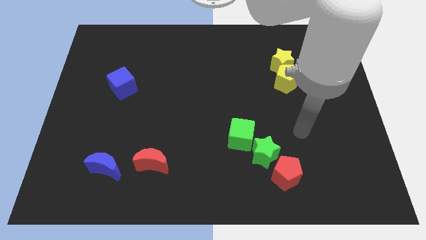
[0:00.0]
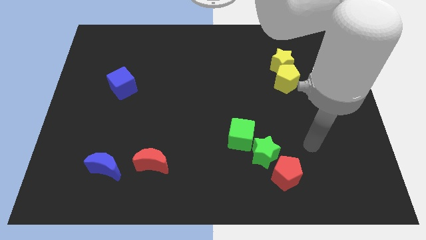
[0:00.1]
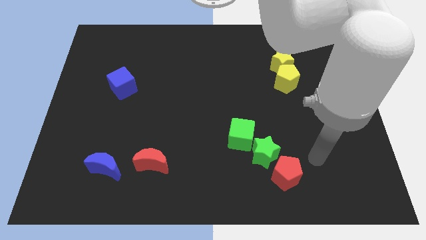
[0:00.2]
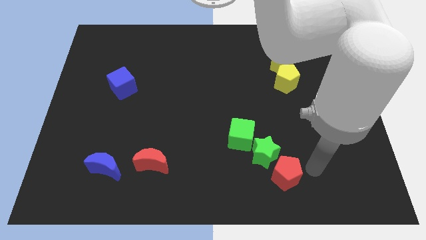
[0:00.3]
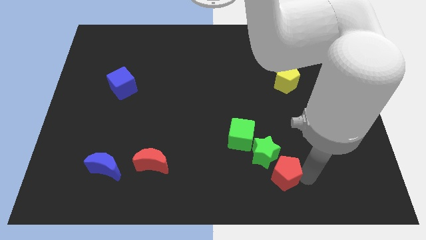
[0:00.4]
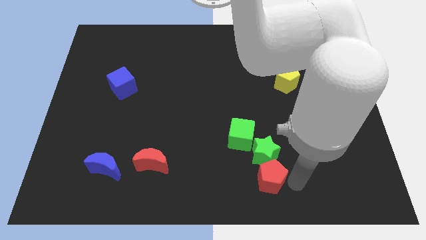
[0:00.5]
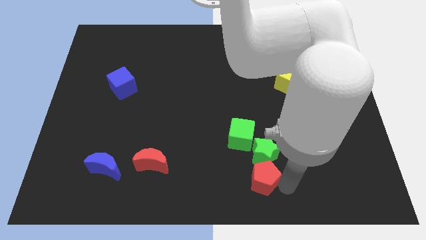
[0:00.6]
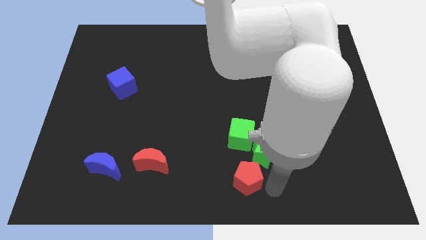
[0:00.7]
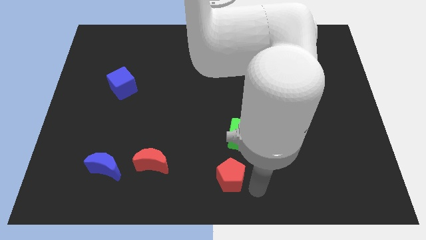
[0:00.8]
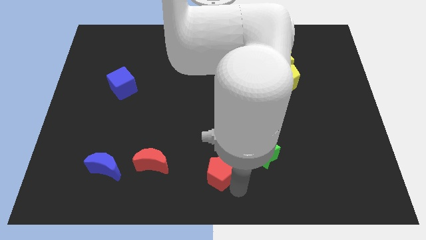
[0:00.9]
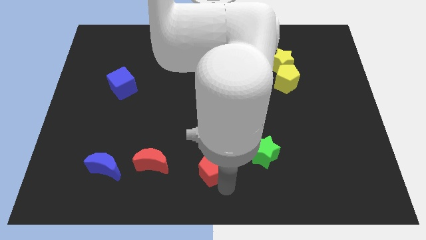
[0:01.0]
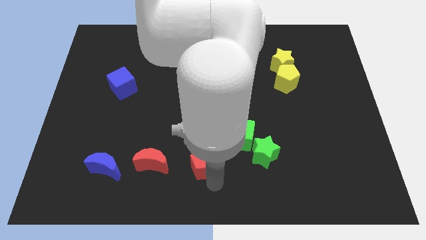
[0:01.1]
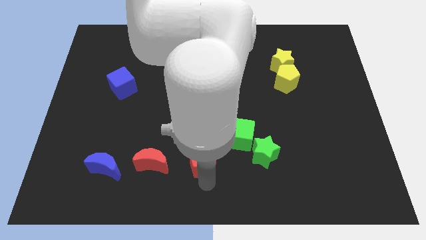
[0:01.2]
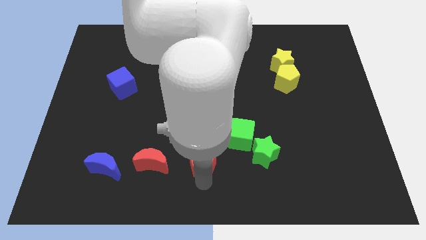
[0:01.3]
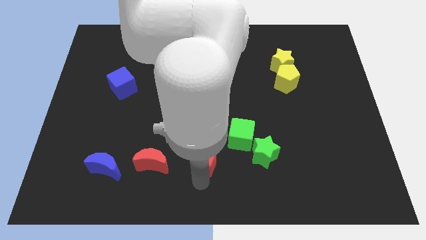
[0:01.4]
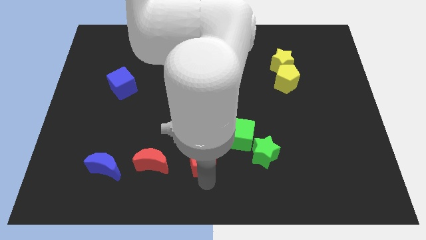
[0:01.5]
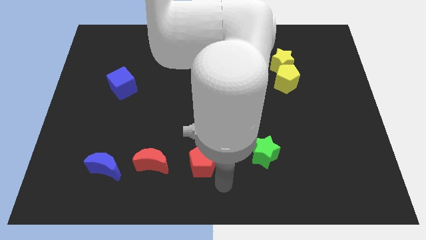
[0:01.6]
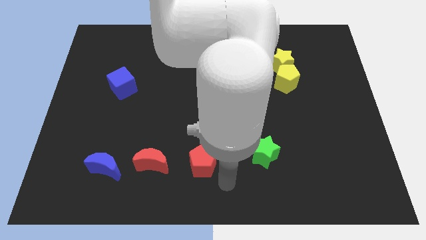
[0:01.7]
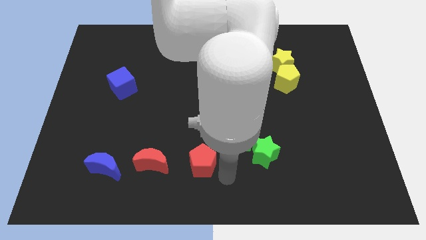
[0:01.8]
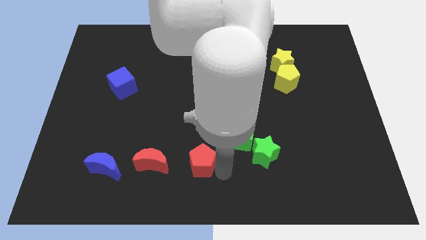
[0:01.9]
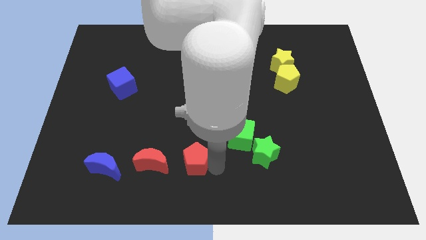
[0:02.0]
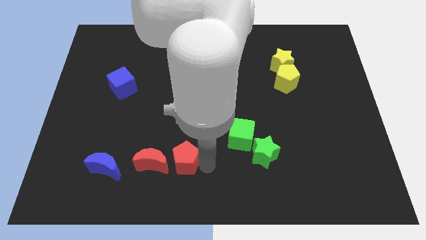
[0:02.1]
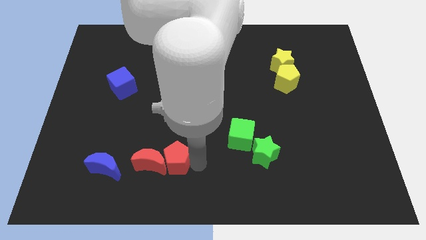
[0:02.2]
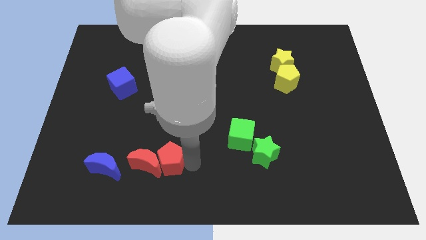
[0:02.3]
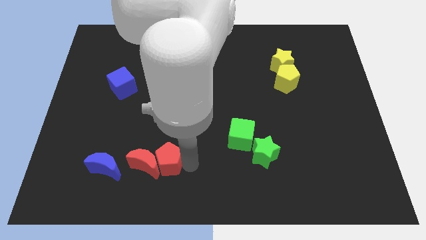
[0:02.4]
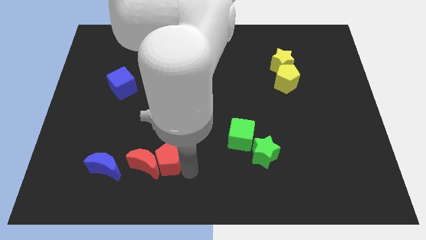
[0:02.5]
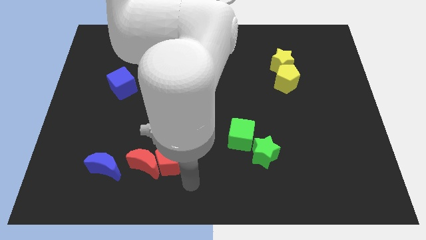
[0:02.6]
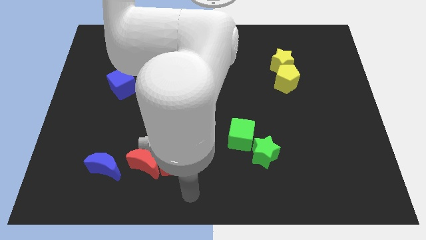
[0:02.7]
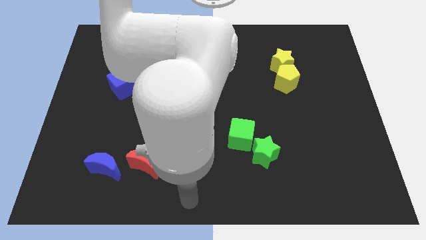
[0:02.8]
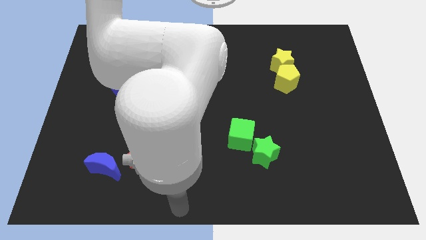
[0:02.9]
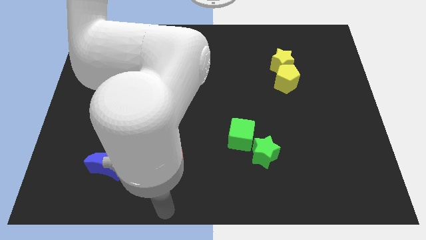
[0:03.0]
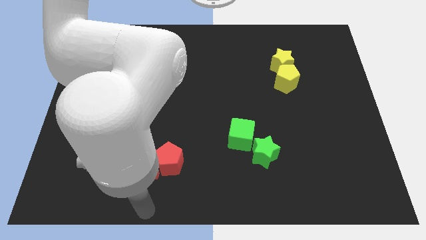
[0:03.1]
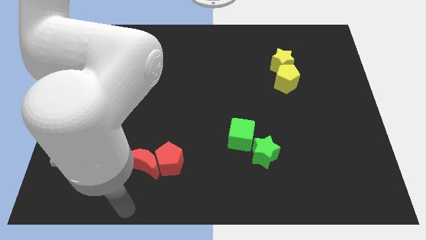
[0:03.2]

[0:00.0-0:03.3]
place the red pentagon right to the red crescent

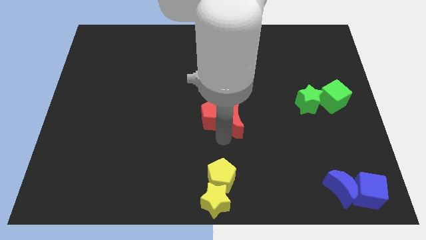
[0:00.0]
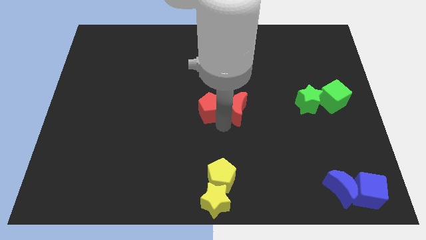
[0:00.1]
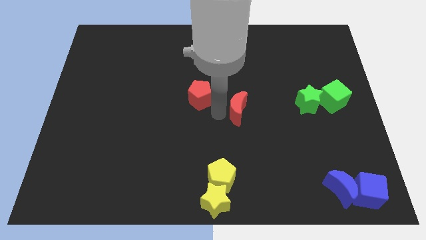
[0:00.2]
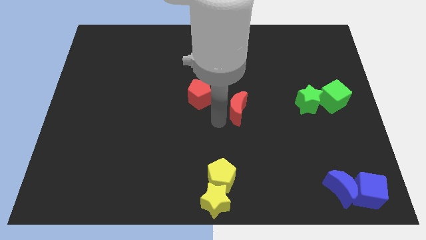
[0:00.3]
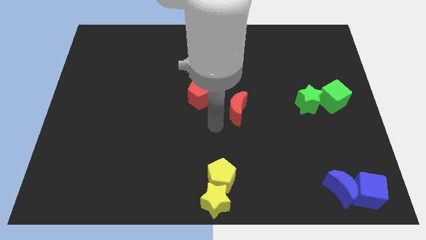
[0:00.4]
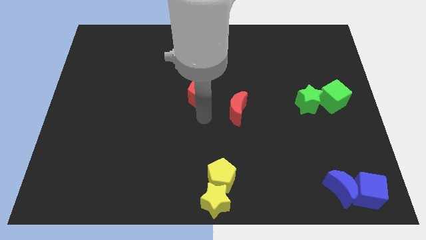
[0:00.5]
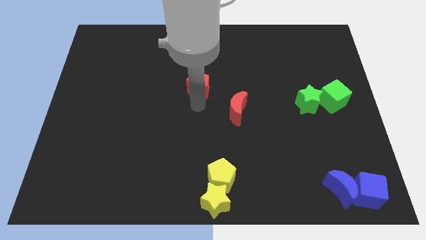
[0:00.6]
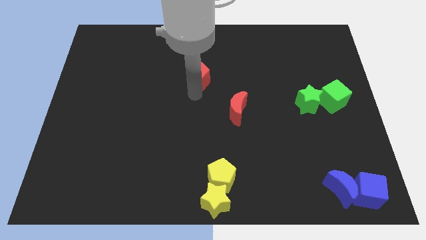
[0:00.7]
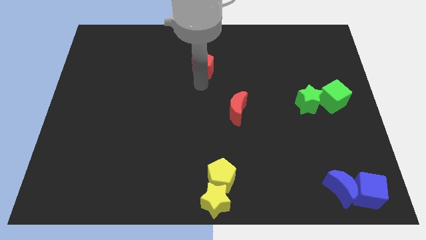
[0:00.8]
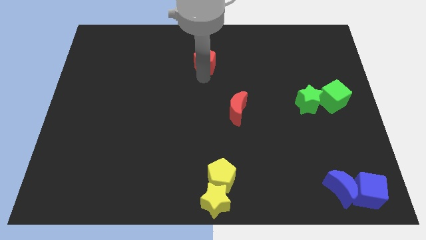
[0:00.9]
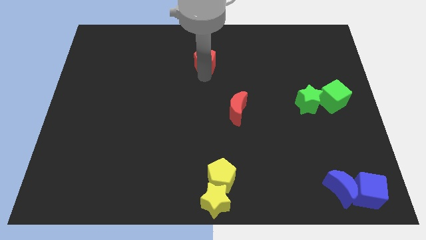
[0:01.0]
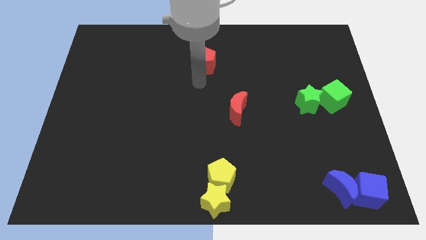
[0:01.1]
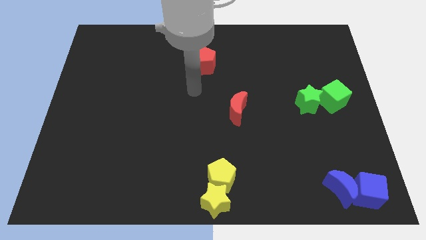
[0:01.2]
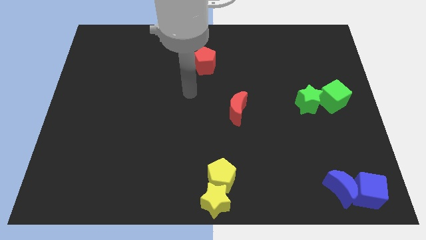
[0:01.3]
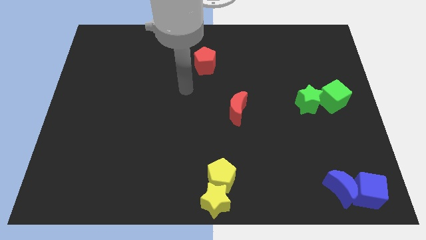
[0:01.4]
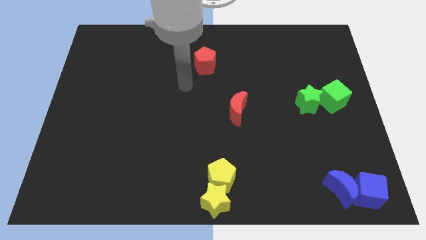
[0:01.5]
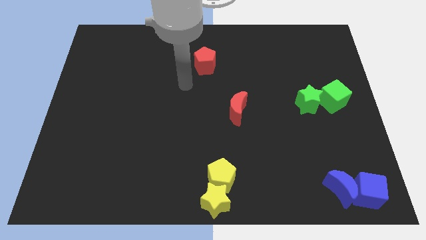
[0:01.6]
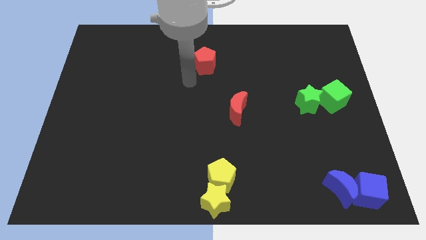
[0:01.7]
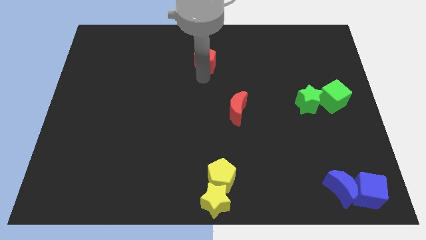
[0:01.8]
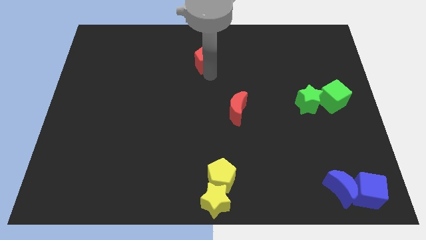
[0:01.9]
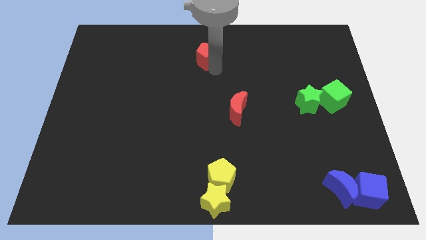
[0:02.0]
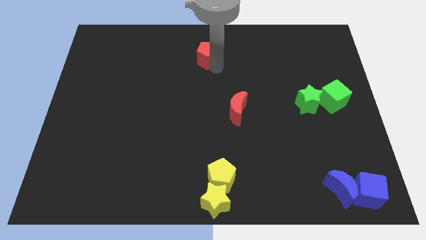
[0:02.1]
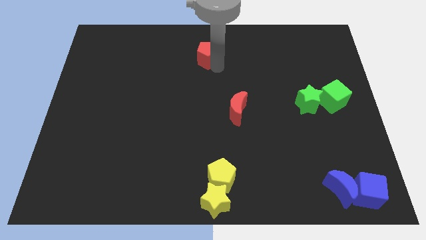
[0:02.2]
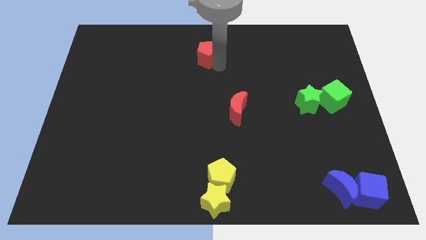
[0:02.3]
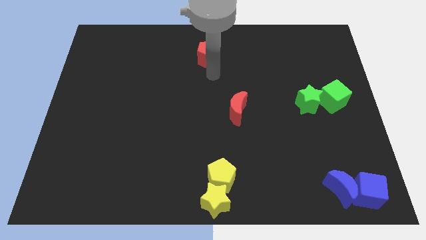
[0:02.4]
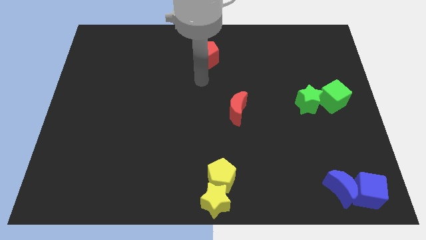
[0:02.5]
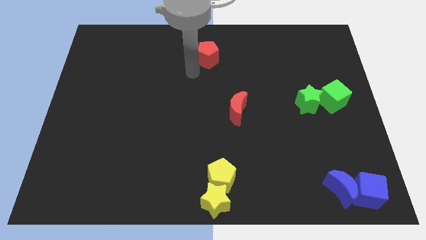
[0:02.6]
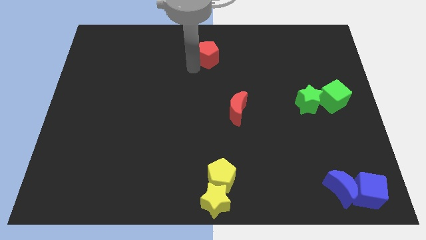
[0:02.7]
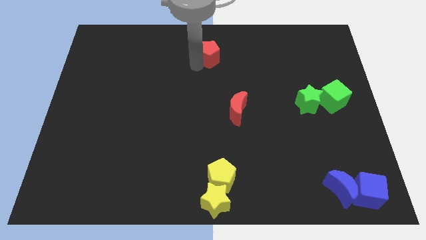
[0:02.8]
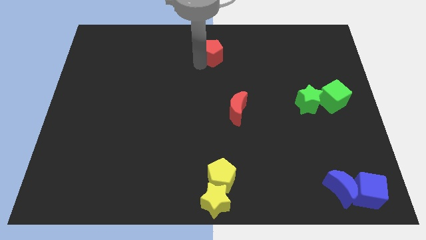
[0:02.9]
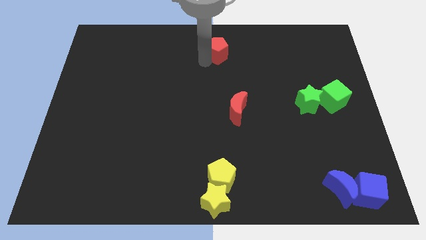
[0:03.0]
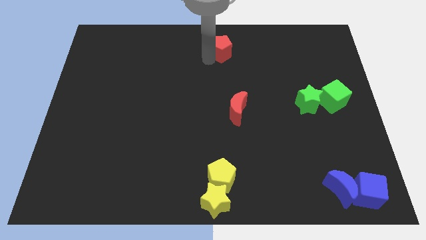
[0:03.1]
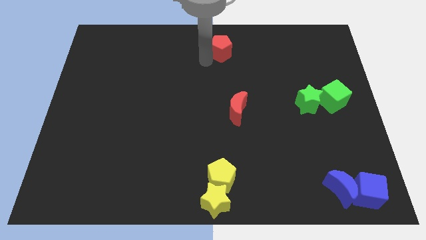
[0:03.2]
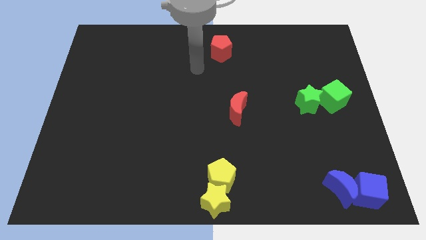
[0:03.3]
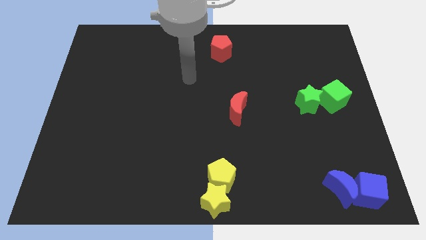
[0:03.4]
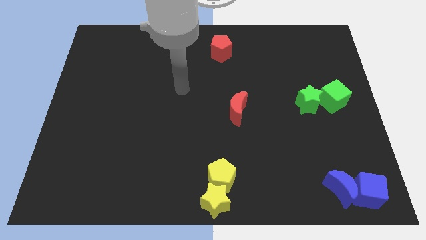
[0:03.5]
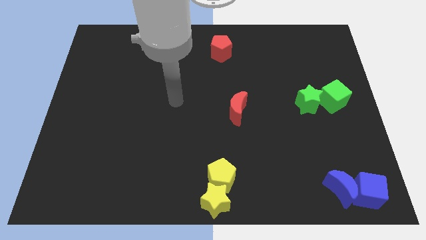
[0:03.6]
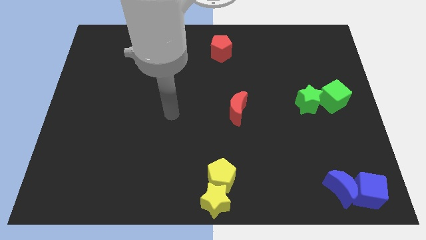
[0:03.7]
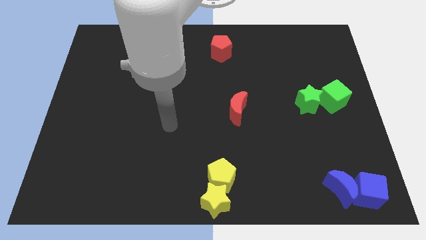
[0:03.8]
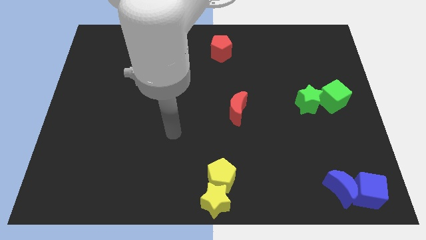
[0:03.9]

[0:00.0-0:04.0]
move the red pentagon towards the top center side of the board

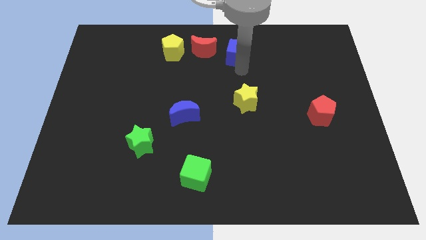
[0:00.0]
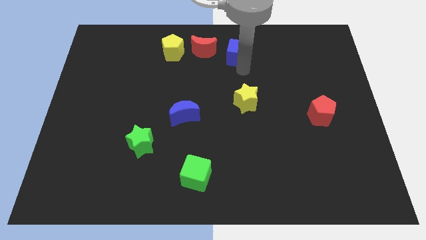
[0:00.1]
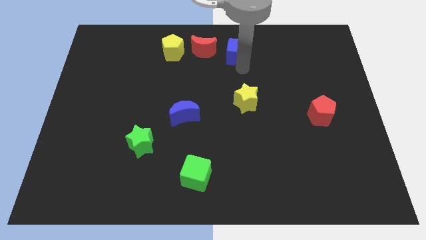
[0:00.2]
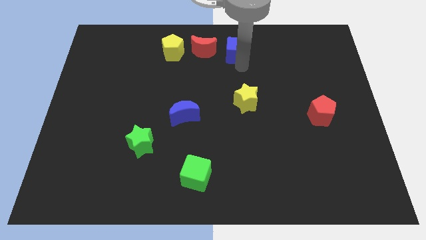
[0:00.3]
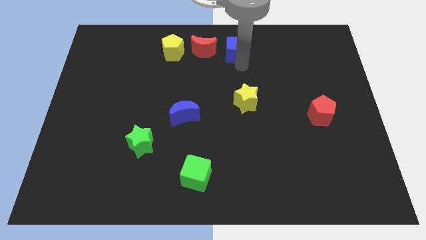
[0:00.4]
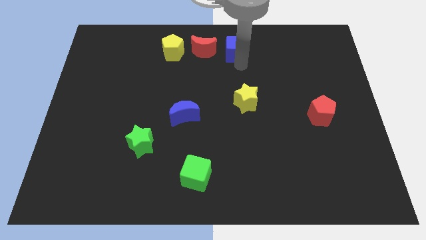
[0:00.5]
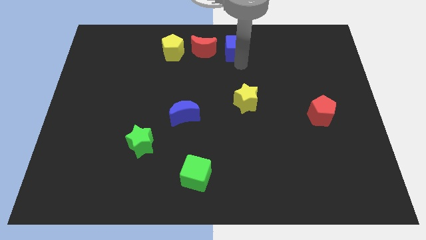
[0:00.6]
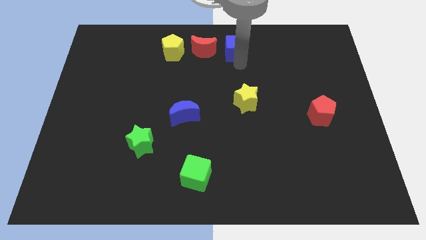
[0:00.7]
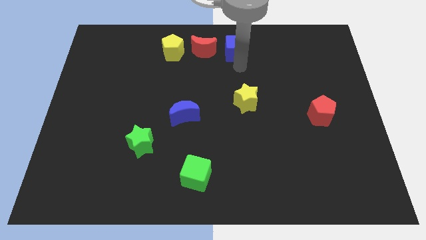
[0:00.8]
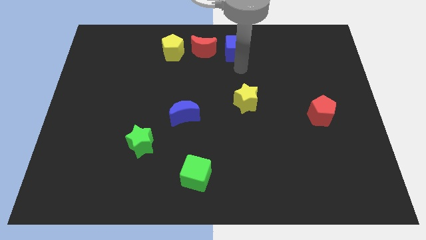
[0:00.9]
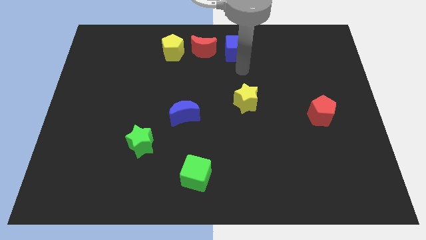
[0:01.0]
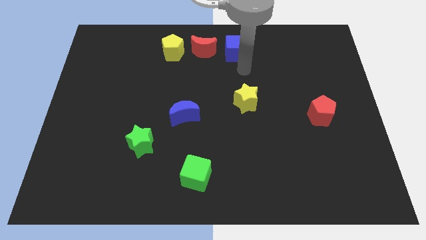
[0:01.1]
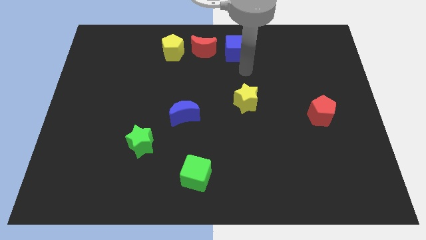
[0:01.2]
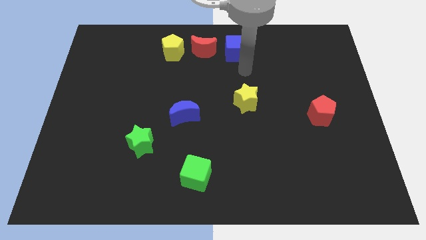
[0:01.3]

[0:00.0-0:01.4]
place blue cube to the right side of red moon

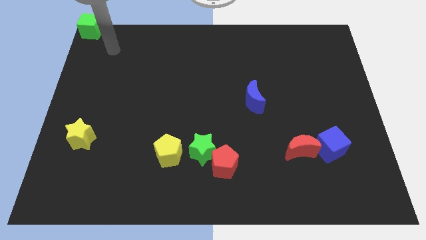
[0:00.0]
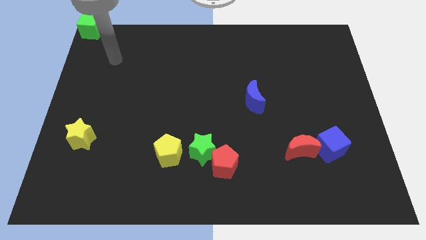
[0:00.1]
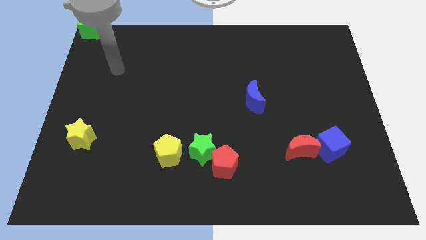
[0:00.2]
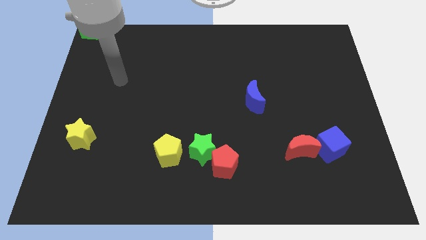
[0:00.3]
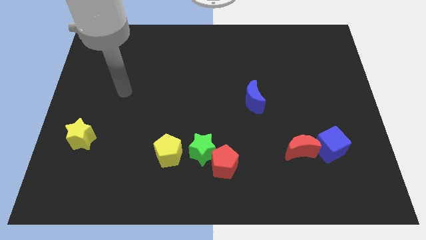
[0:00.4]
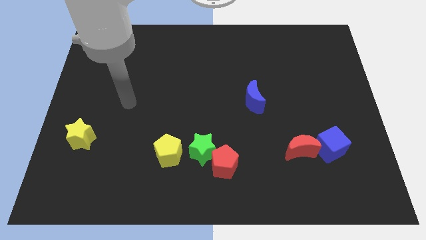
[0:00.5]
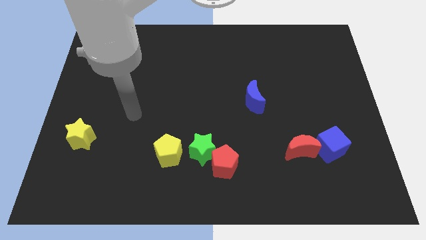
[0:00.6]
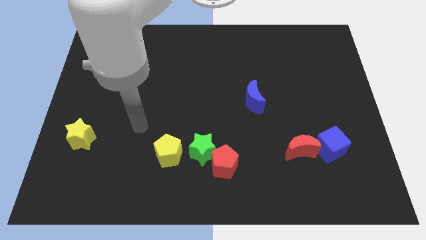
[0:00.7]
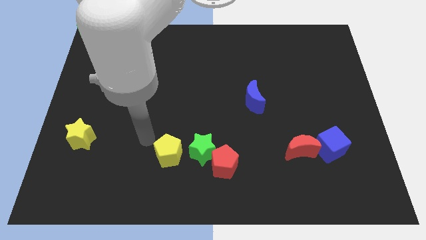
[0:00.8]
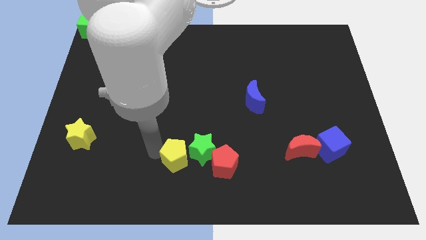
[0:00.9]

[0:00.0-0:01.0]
move the arm away from the green cube
